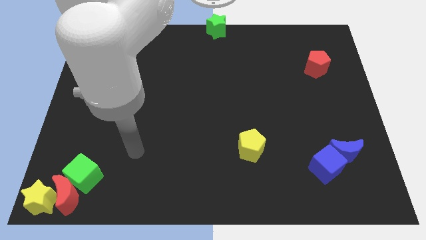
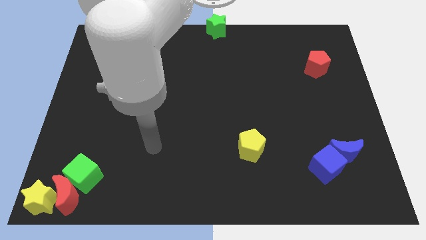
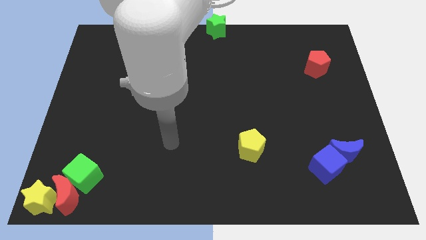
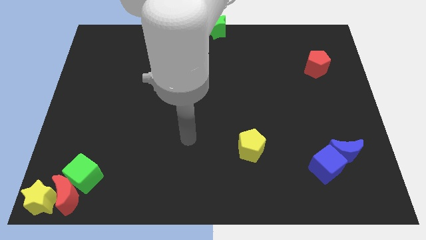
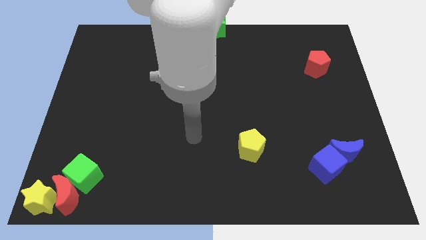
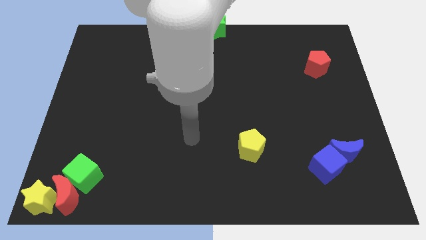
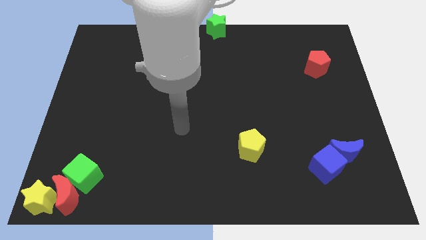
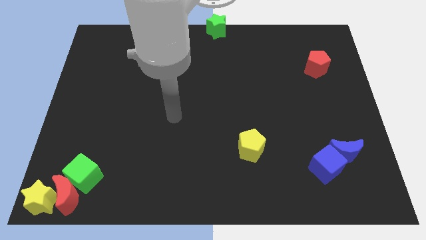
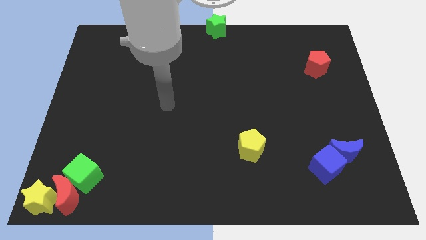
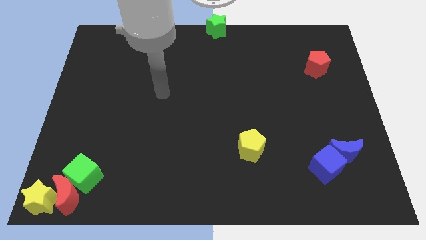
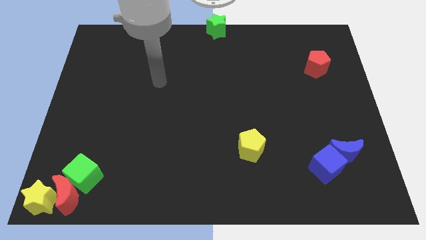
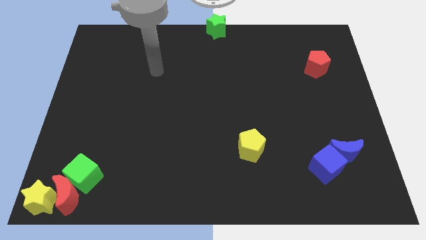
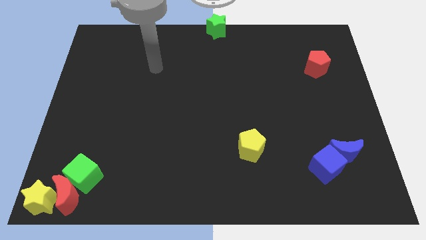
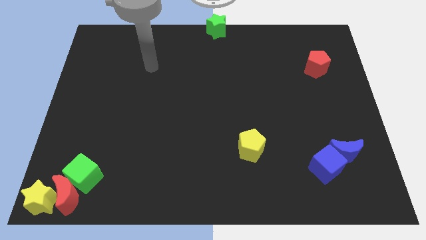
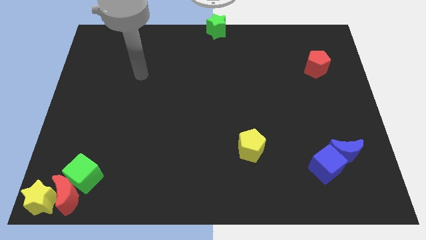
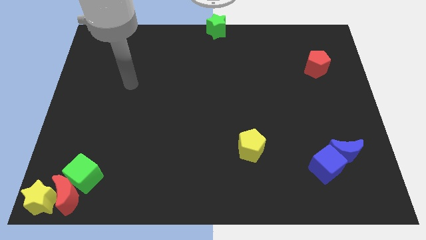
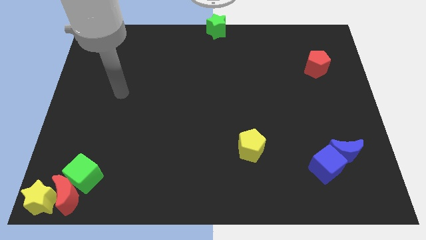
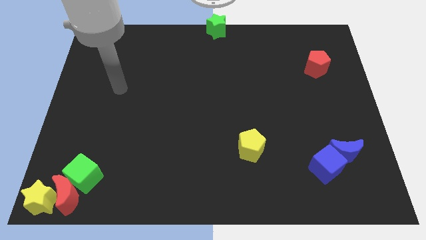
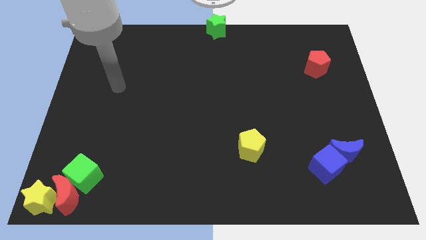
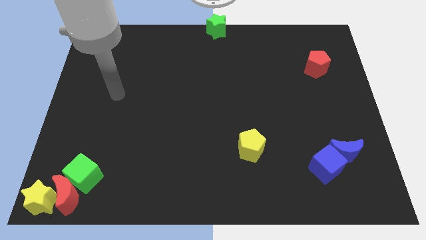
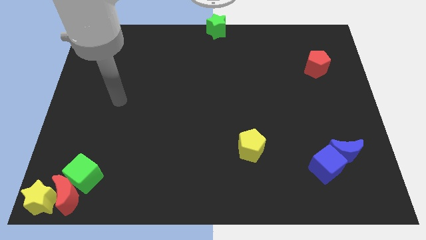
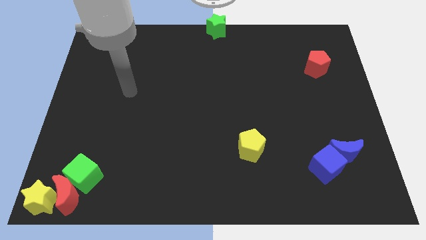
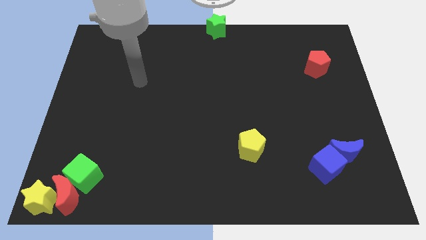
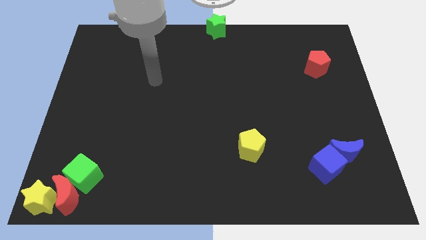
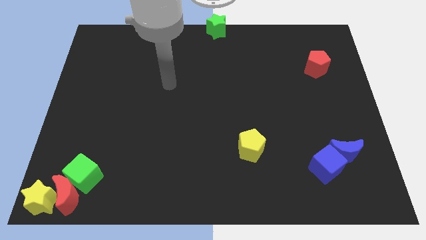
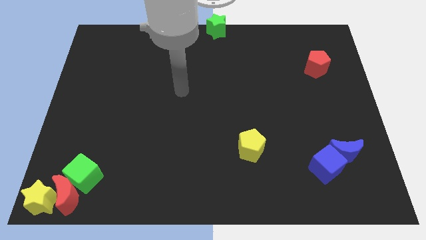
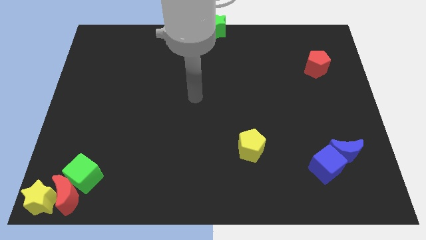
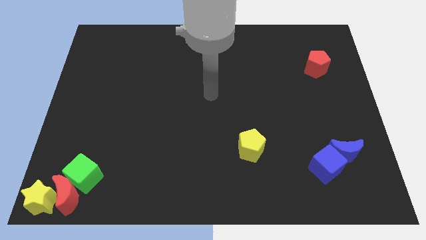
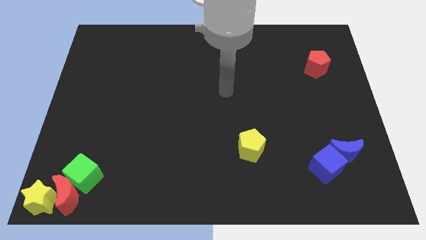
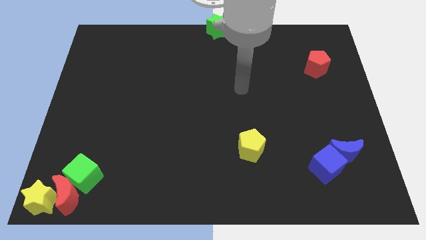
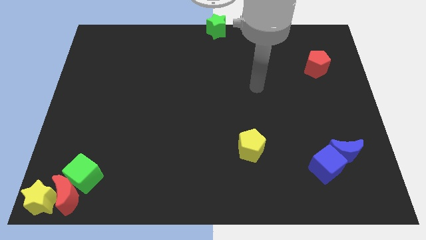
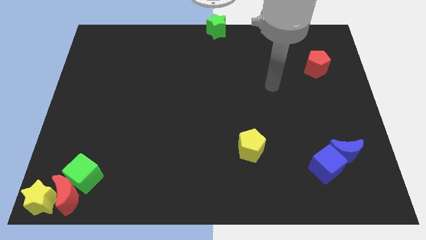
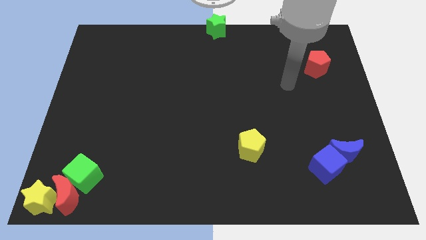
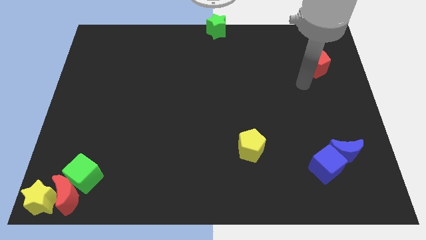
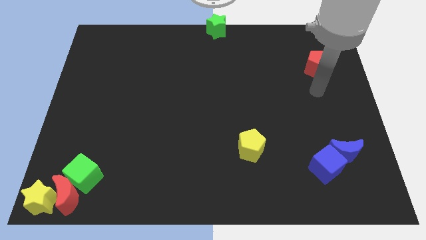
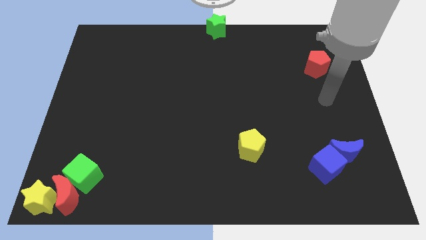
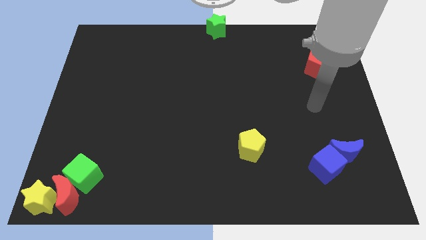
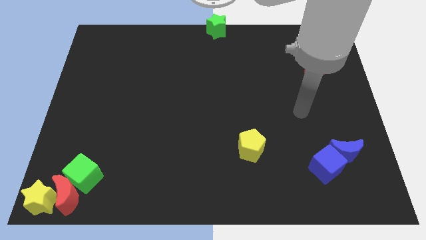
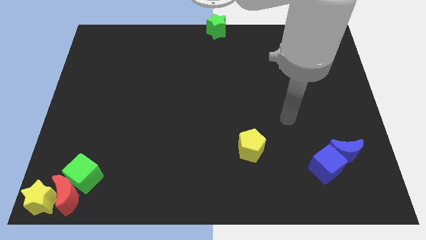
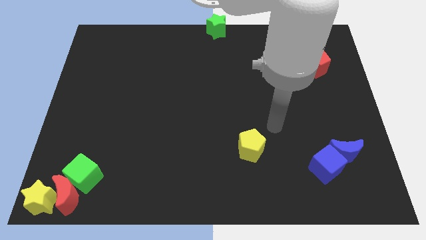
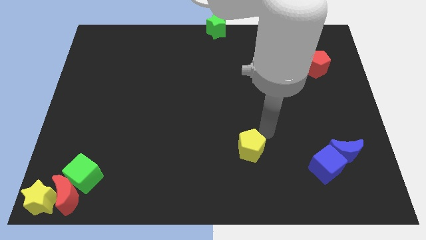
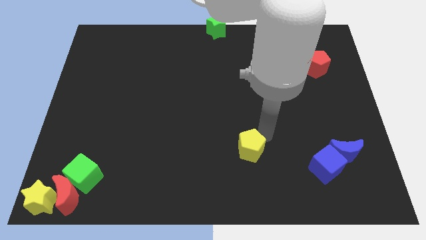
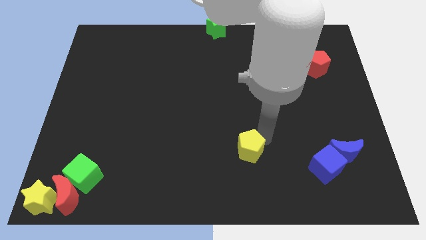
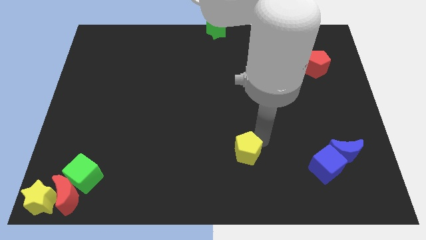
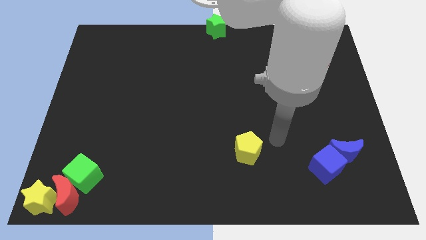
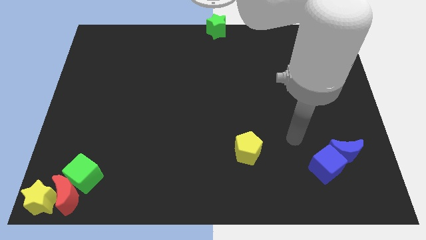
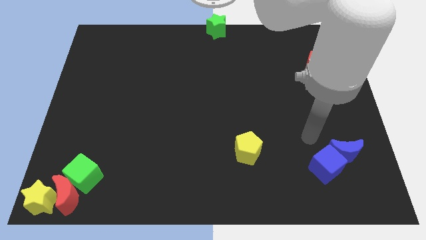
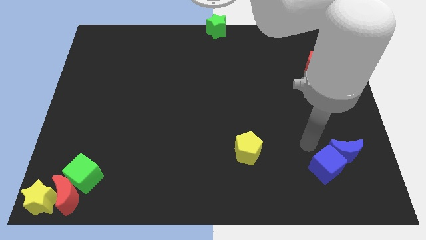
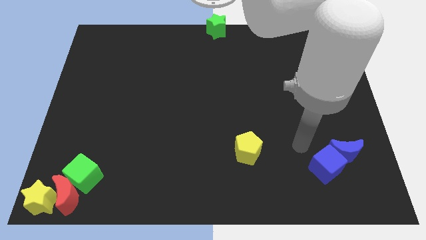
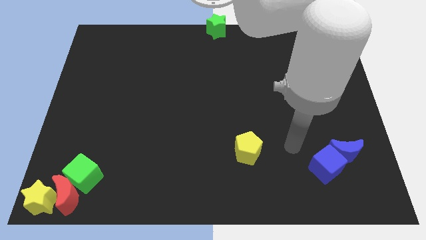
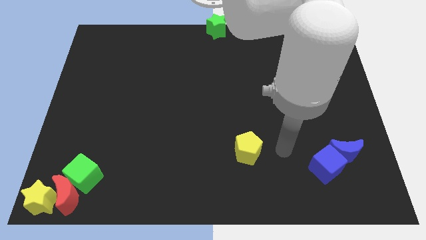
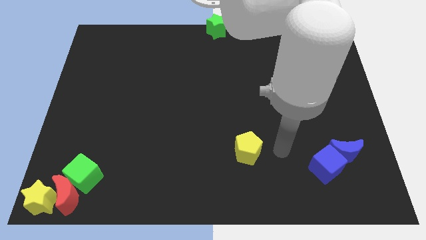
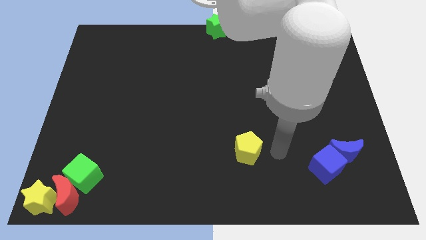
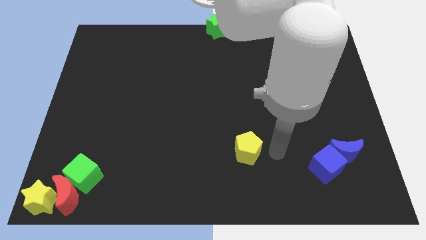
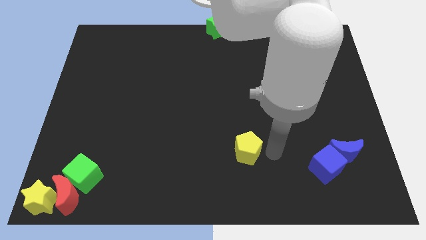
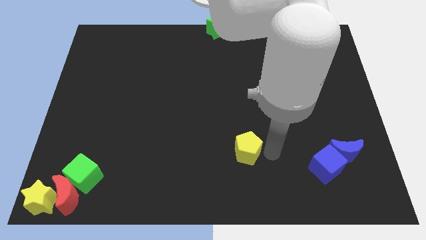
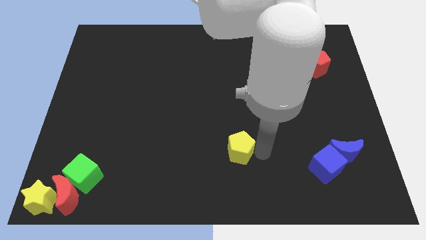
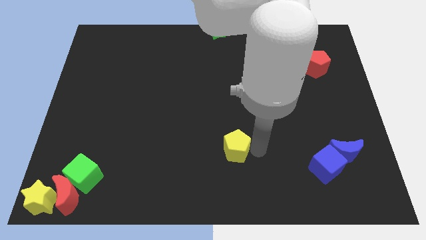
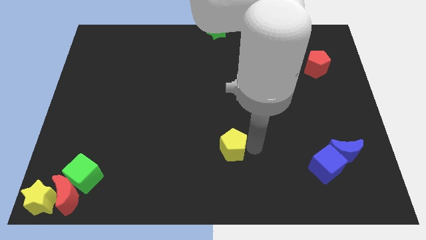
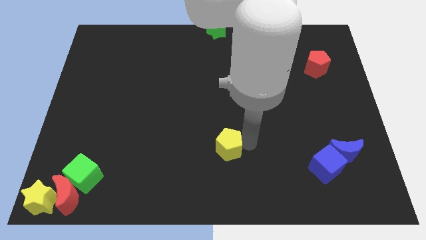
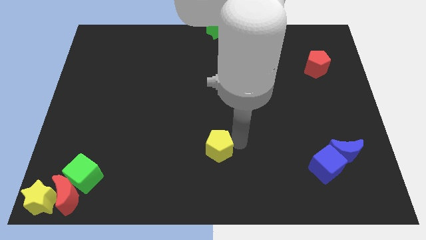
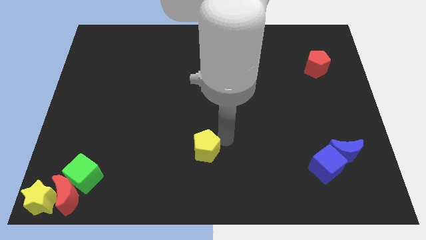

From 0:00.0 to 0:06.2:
place the yellow pentagon below the green star

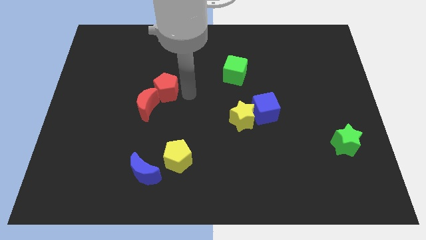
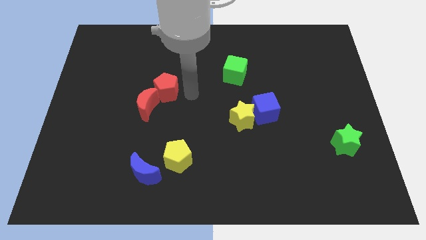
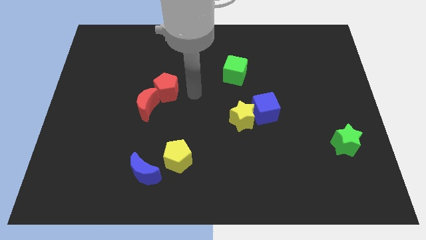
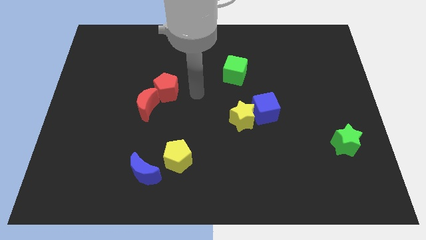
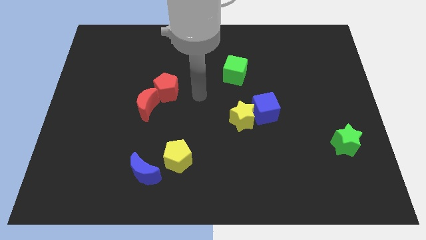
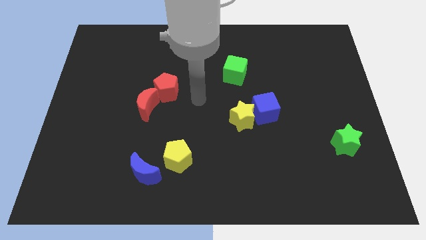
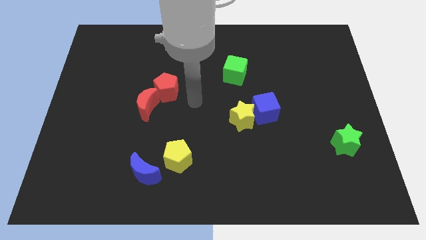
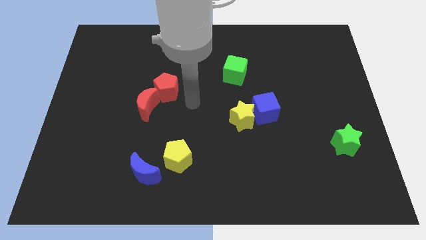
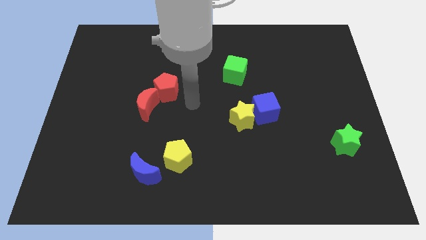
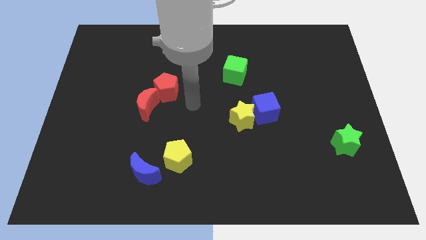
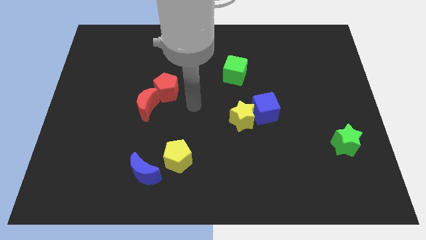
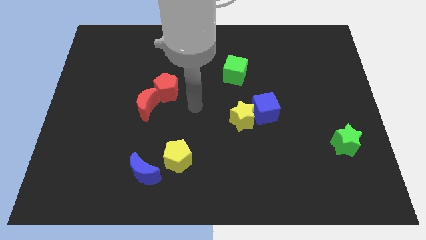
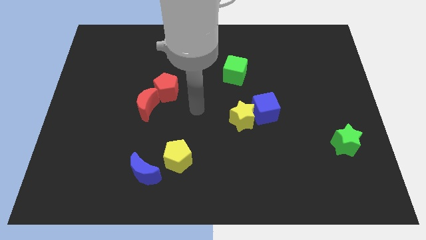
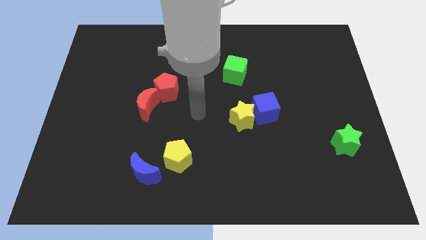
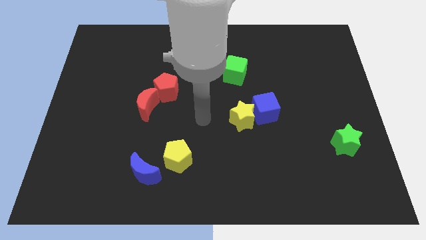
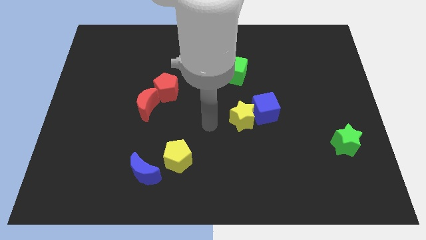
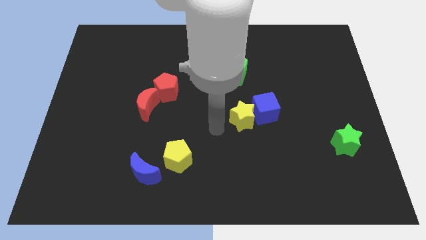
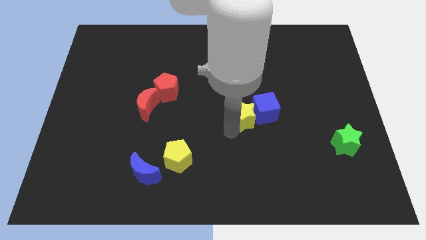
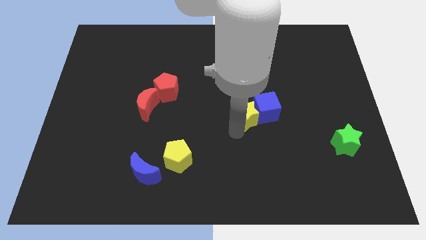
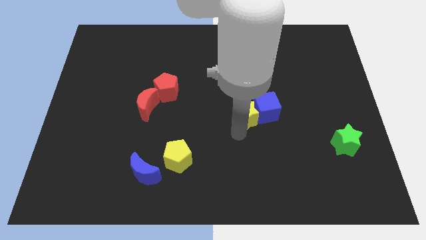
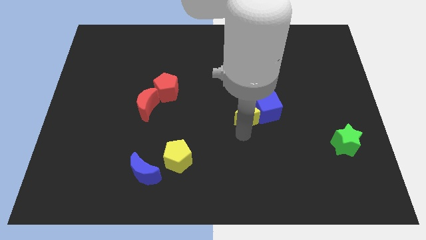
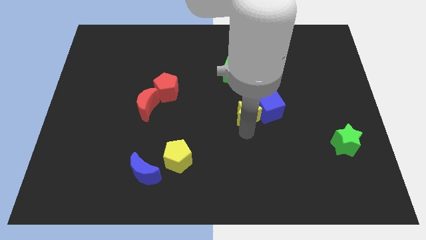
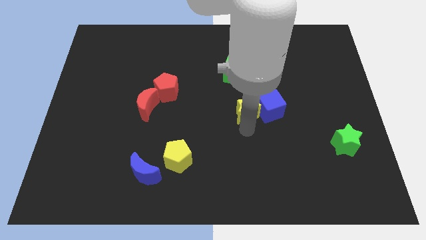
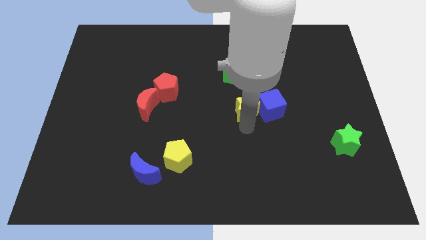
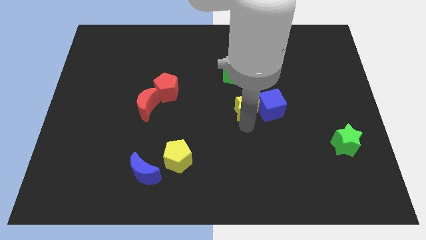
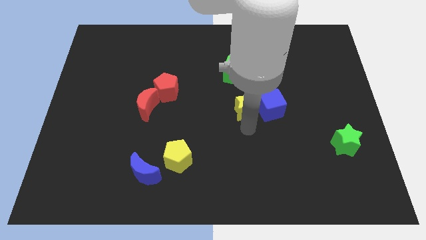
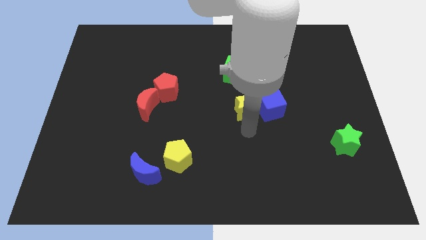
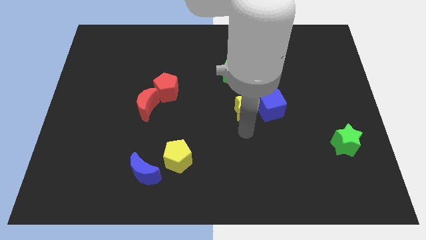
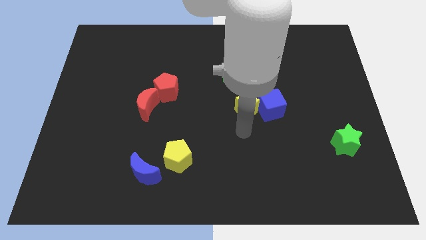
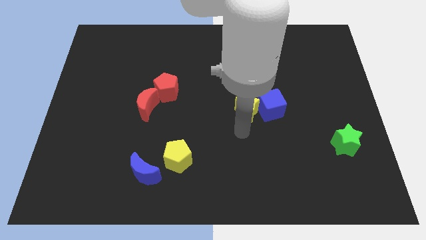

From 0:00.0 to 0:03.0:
move the yellow star slightly into the blue cube
